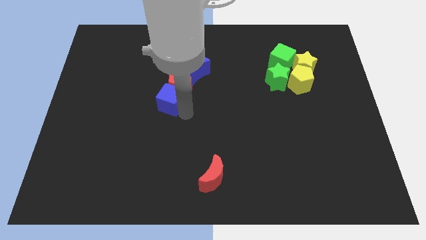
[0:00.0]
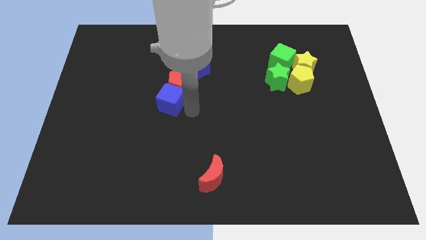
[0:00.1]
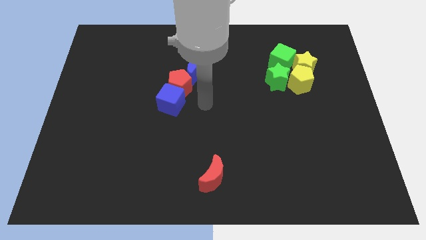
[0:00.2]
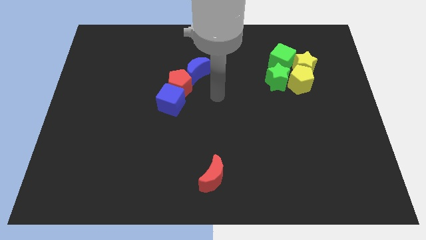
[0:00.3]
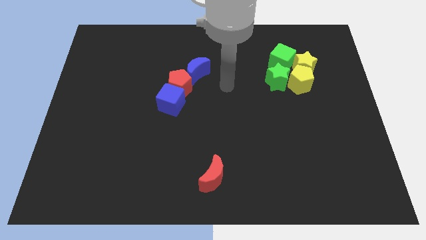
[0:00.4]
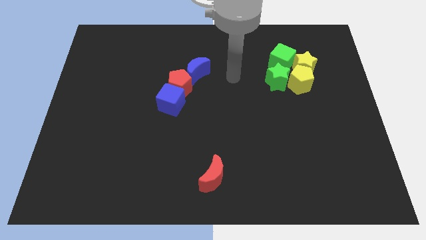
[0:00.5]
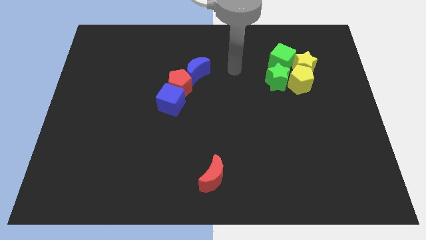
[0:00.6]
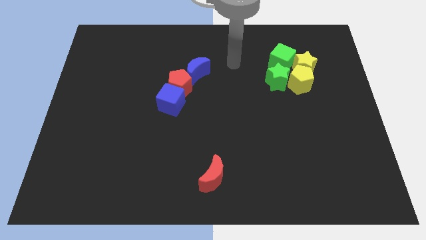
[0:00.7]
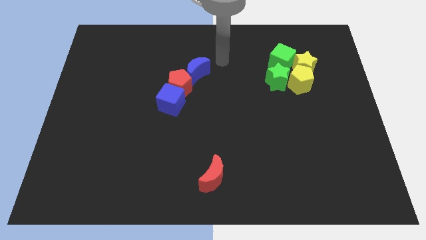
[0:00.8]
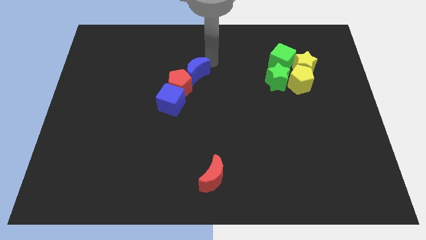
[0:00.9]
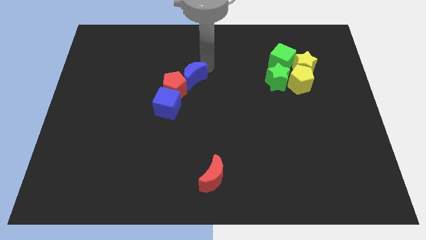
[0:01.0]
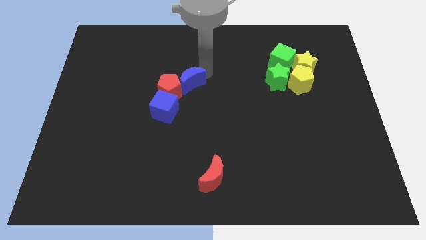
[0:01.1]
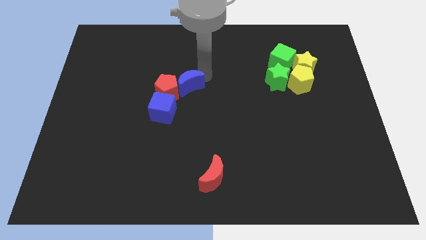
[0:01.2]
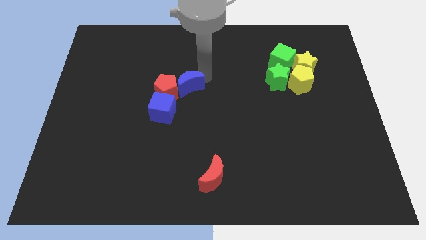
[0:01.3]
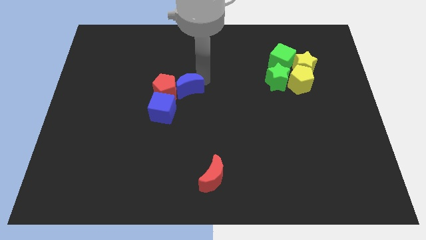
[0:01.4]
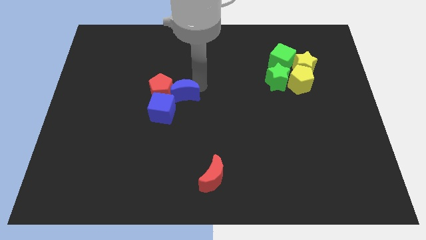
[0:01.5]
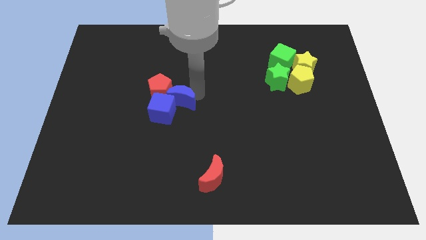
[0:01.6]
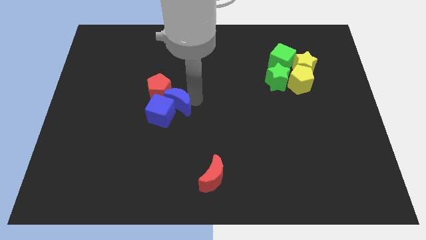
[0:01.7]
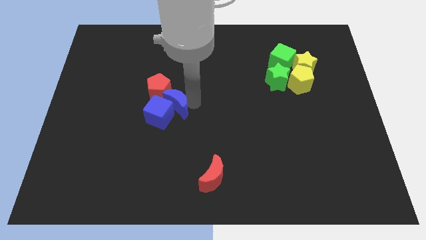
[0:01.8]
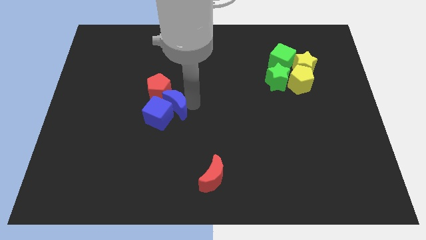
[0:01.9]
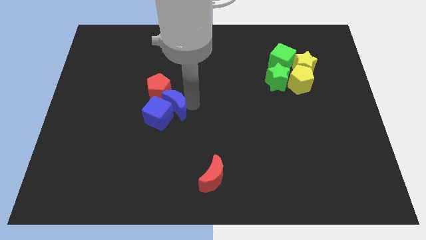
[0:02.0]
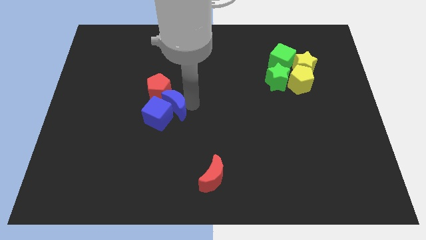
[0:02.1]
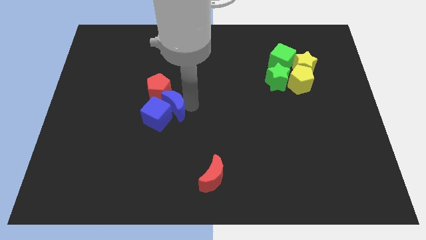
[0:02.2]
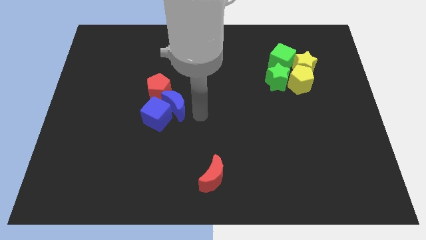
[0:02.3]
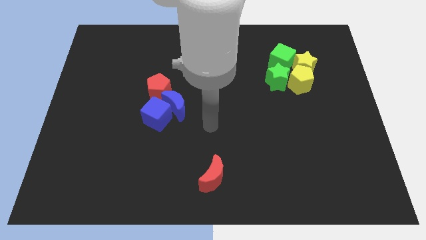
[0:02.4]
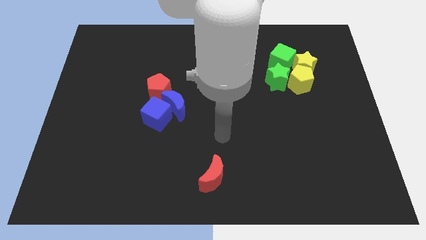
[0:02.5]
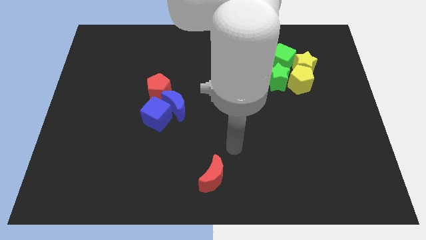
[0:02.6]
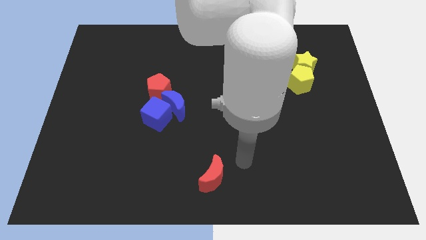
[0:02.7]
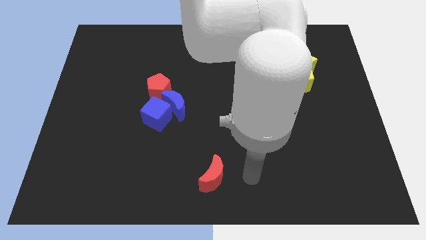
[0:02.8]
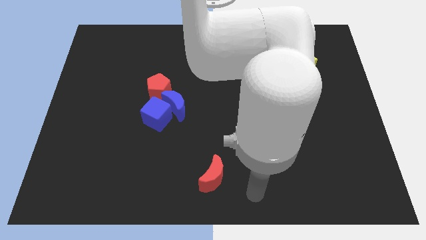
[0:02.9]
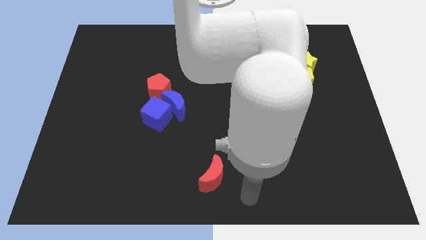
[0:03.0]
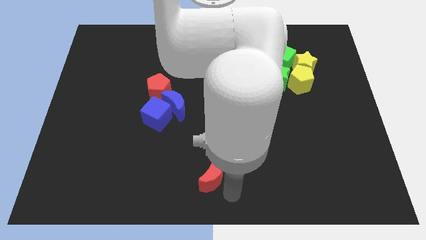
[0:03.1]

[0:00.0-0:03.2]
push the group of both blue blocks and red pentagon slightly to the bottom side of the board

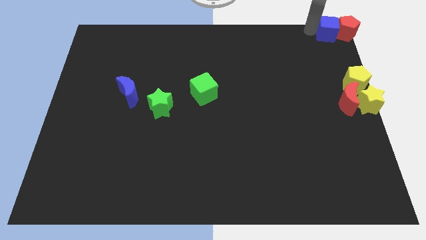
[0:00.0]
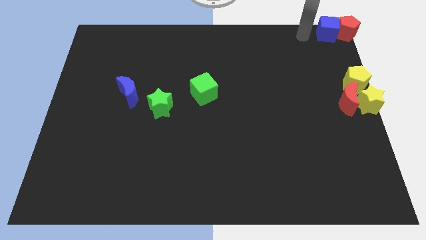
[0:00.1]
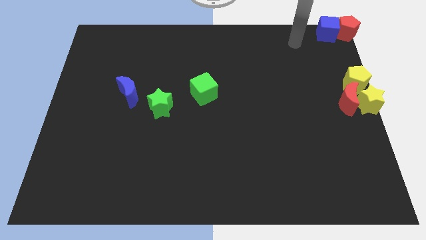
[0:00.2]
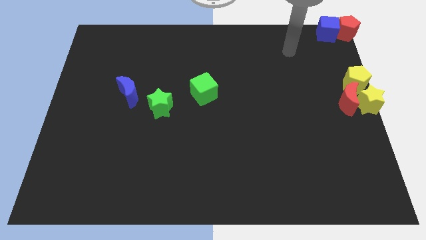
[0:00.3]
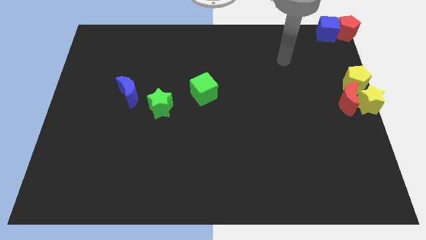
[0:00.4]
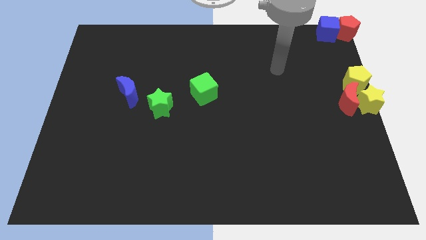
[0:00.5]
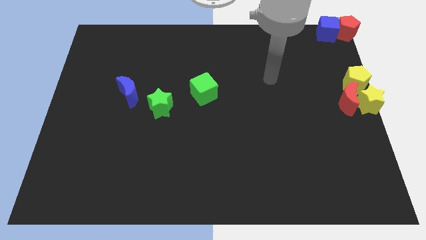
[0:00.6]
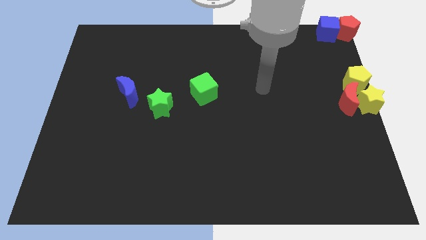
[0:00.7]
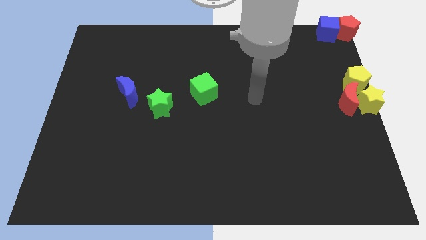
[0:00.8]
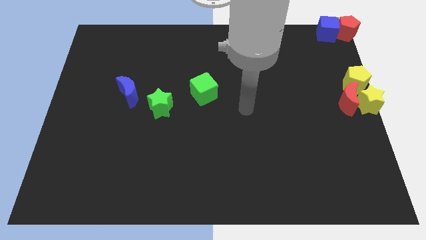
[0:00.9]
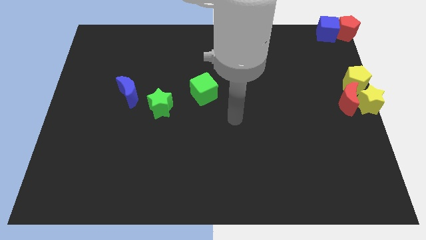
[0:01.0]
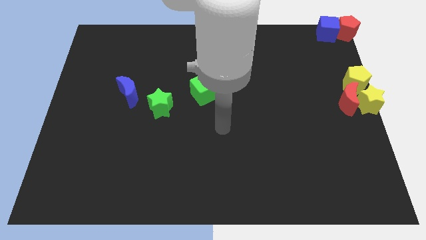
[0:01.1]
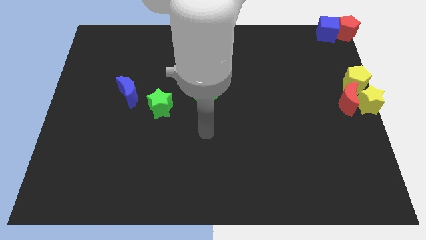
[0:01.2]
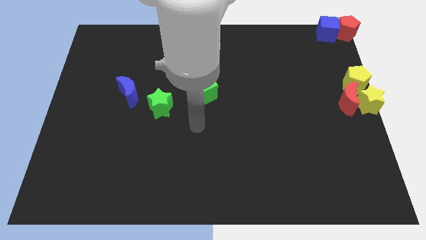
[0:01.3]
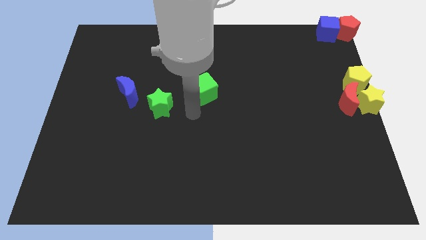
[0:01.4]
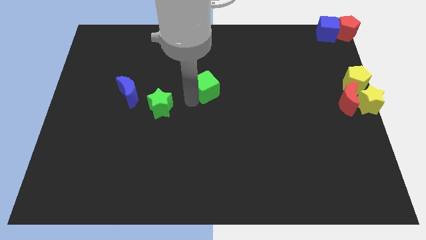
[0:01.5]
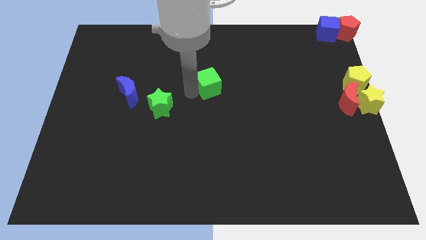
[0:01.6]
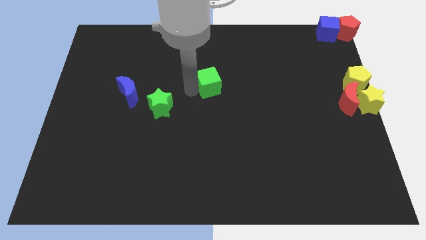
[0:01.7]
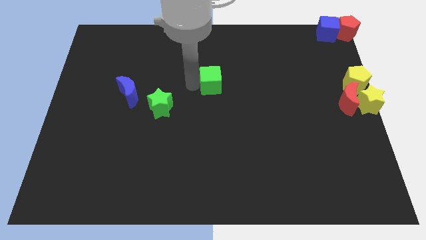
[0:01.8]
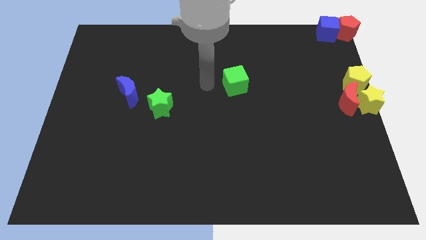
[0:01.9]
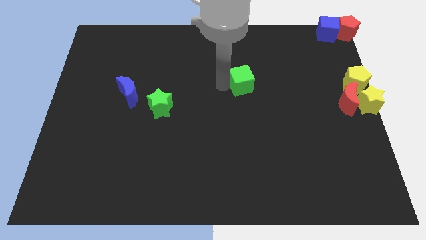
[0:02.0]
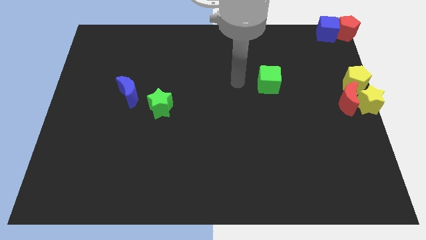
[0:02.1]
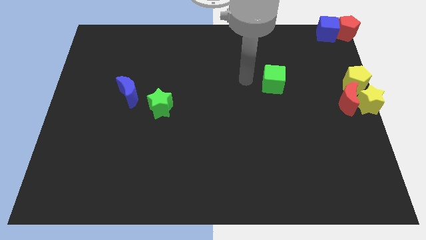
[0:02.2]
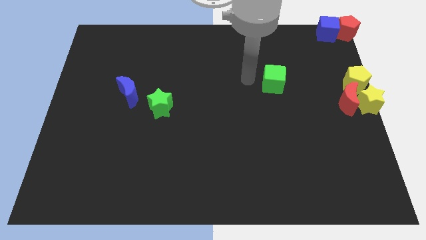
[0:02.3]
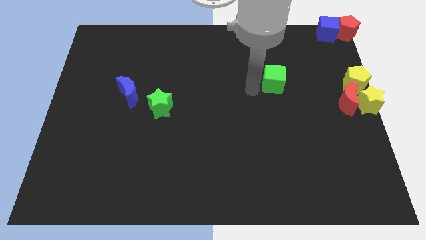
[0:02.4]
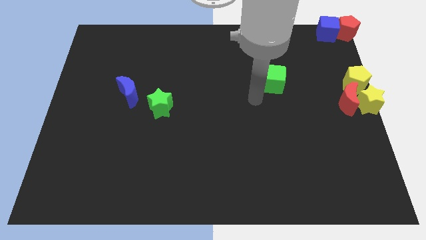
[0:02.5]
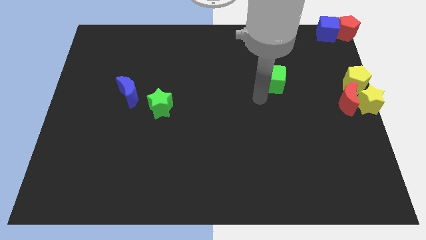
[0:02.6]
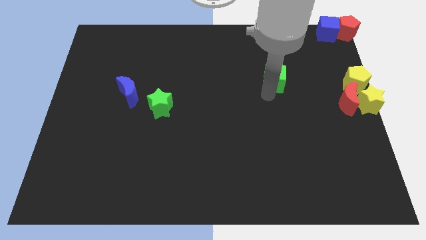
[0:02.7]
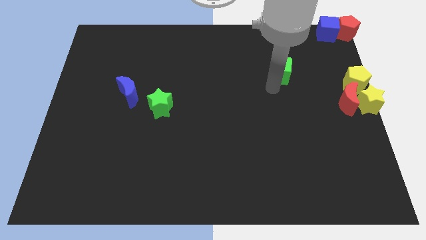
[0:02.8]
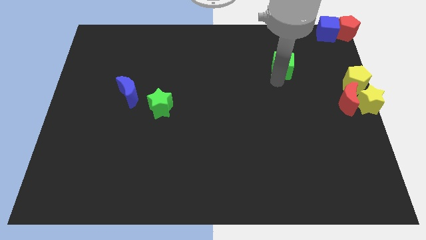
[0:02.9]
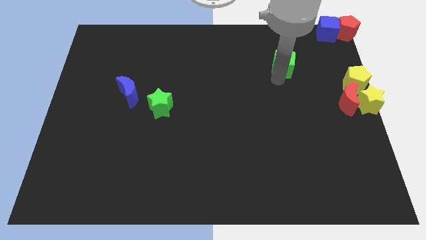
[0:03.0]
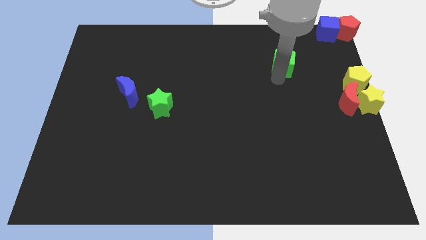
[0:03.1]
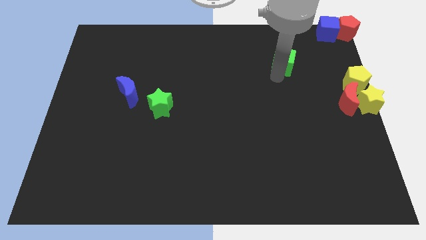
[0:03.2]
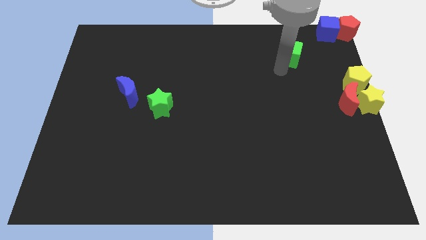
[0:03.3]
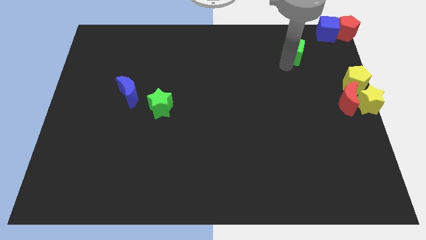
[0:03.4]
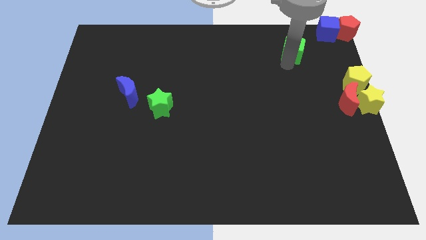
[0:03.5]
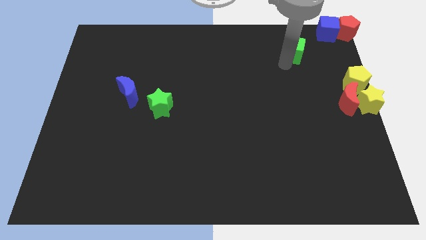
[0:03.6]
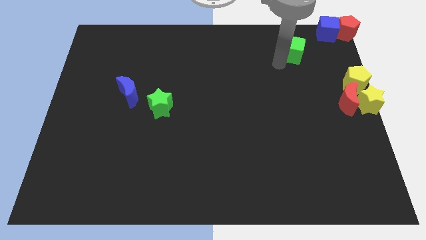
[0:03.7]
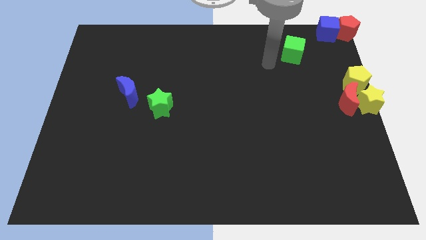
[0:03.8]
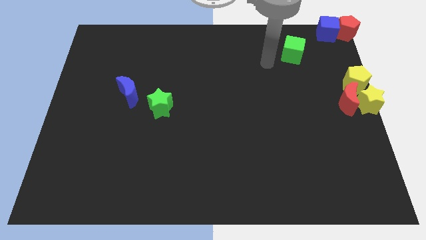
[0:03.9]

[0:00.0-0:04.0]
place the green cube diagonally bottom left to blue cube

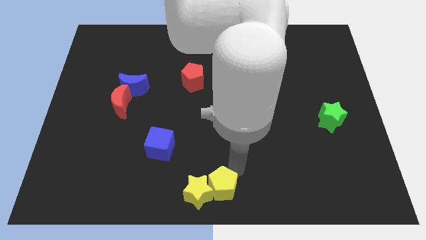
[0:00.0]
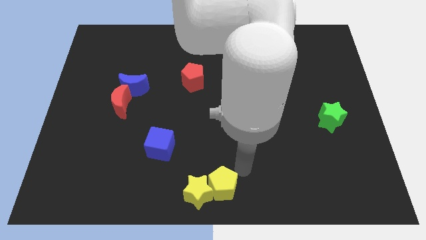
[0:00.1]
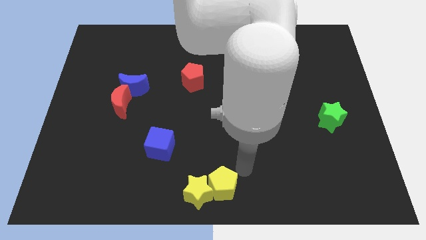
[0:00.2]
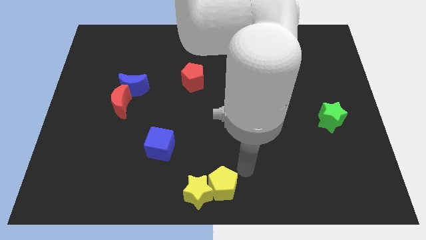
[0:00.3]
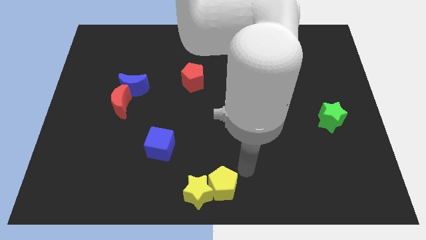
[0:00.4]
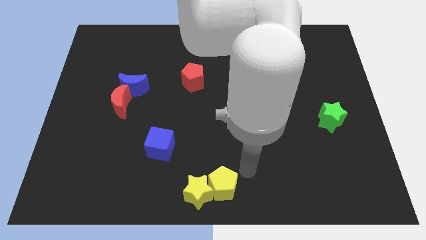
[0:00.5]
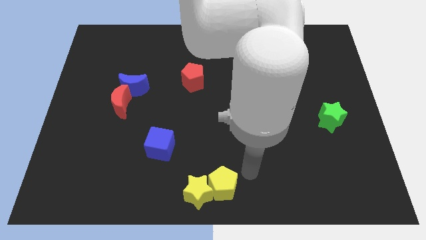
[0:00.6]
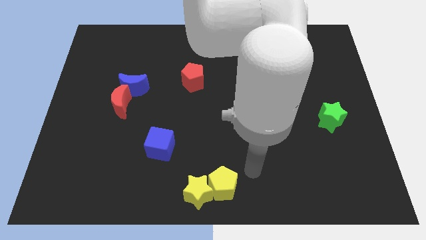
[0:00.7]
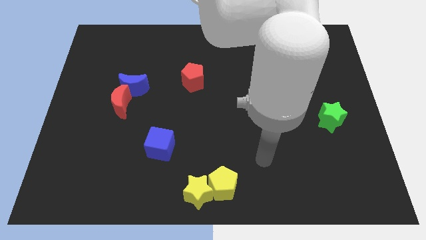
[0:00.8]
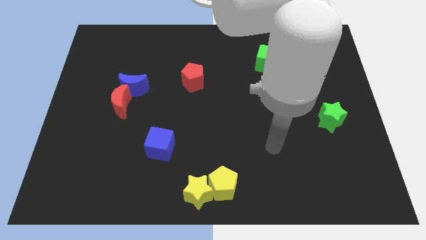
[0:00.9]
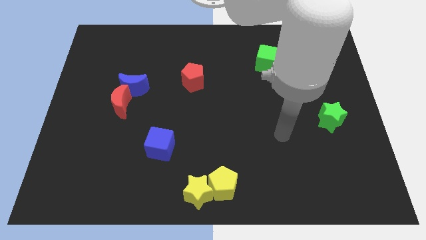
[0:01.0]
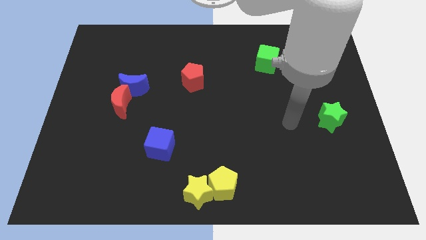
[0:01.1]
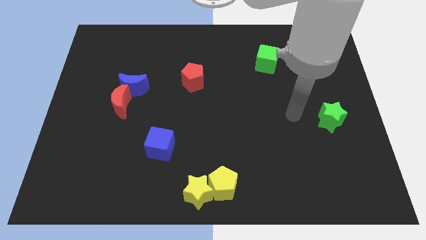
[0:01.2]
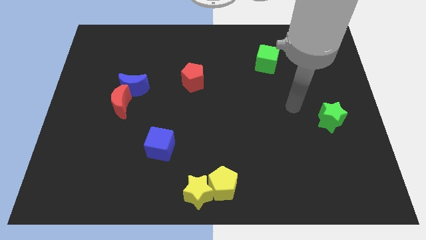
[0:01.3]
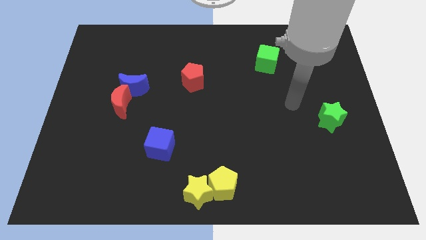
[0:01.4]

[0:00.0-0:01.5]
move the arm away from the yellow pentagon

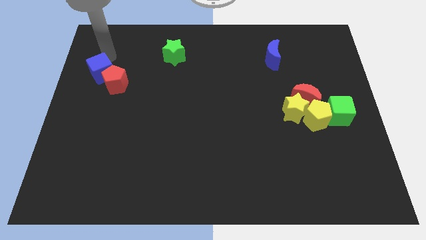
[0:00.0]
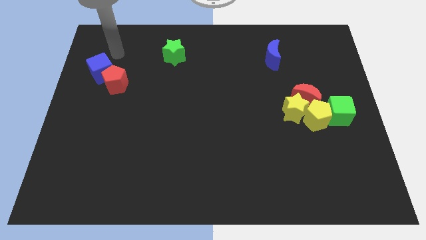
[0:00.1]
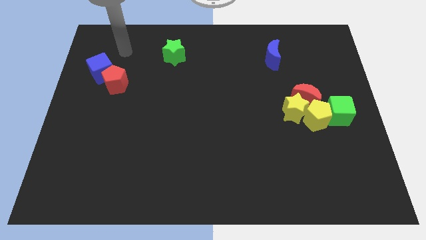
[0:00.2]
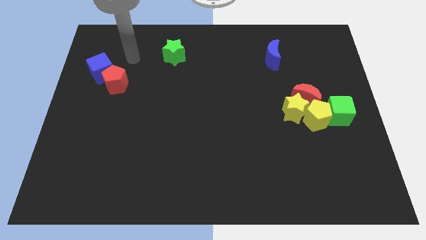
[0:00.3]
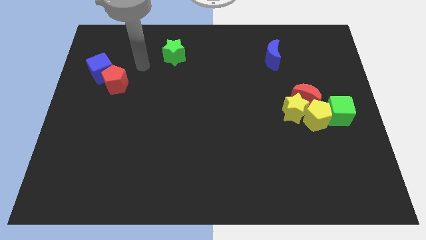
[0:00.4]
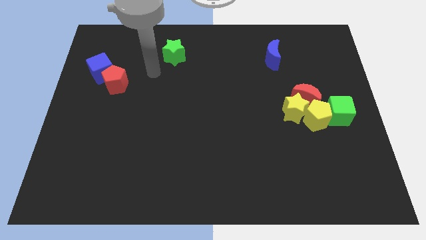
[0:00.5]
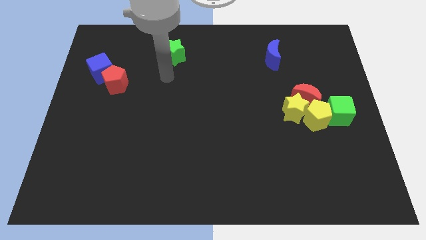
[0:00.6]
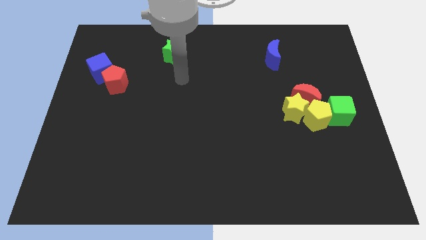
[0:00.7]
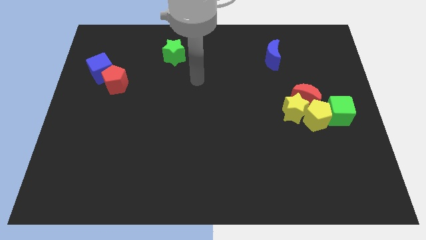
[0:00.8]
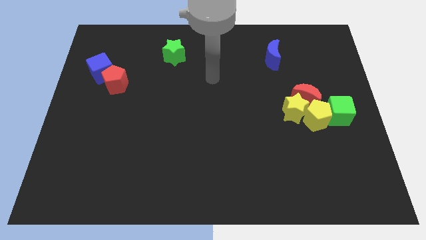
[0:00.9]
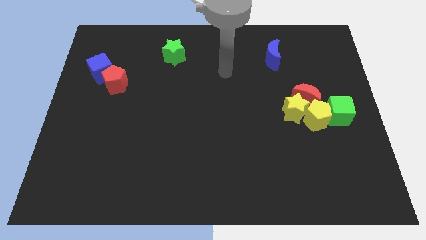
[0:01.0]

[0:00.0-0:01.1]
move your arm away from blue cube
